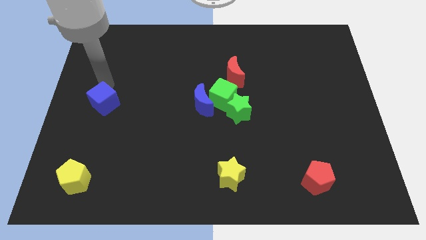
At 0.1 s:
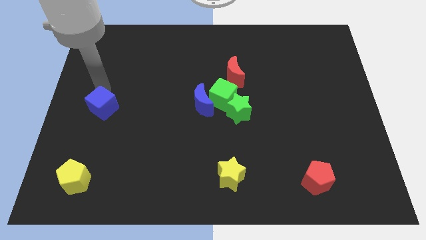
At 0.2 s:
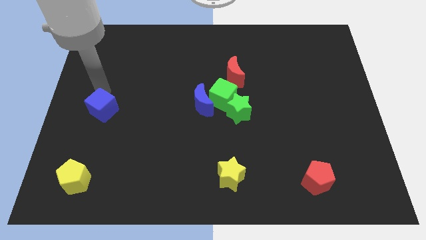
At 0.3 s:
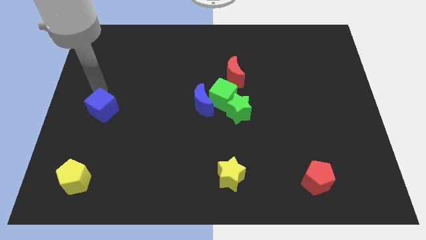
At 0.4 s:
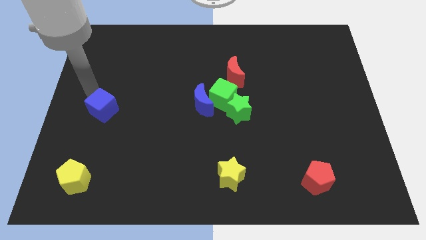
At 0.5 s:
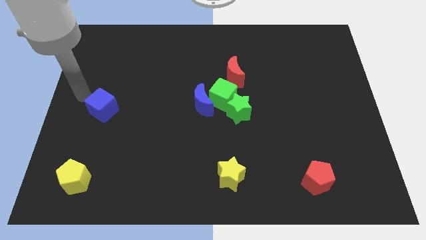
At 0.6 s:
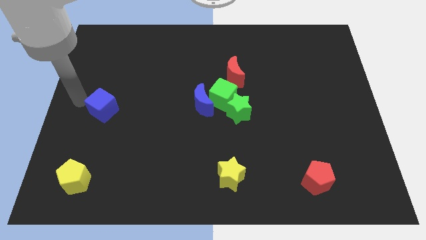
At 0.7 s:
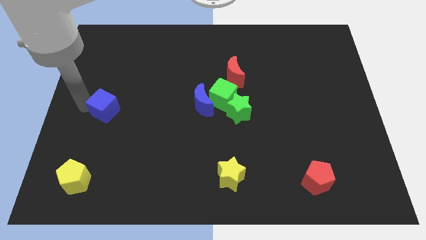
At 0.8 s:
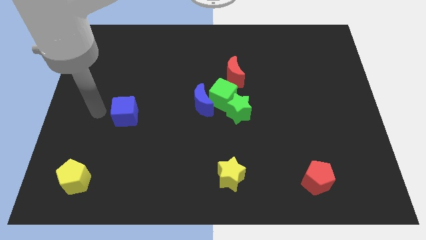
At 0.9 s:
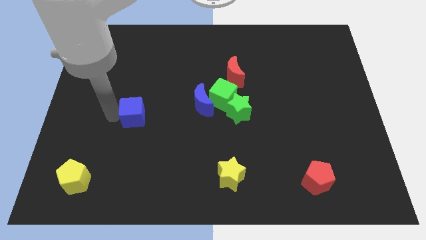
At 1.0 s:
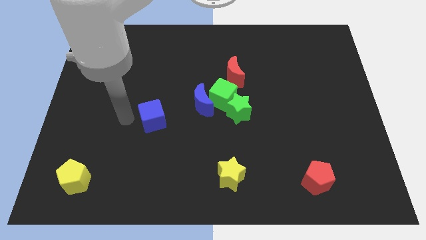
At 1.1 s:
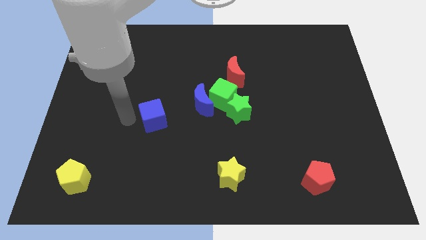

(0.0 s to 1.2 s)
move blue cube slightly right

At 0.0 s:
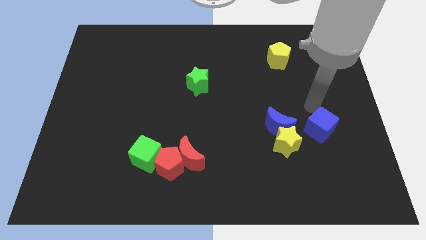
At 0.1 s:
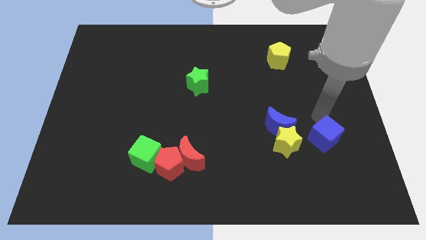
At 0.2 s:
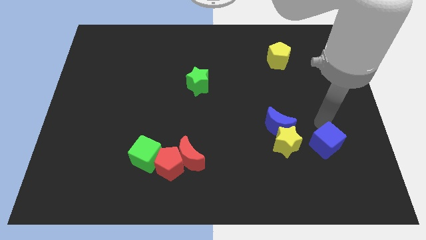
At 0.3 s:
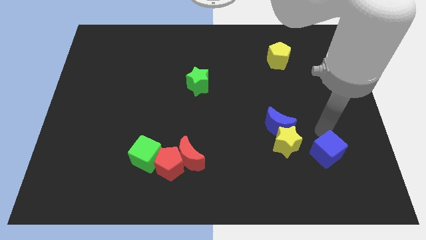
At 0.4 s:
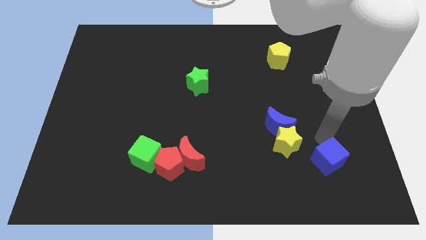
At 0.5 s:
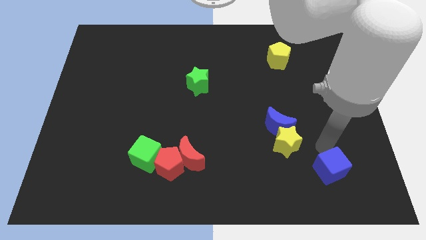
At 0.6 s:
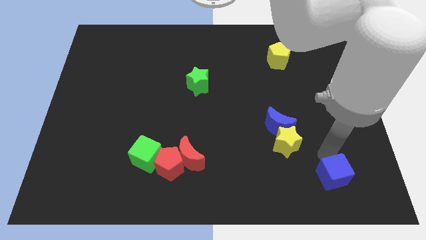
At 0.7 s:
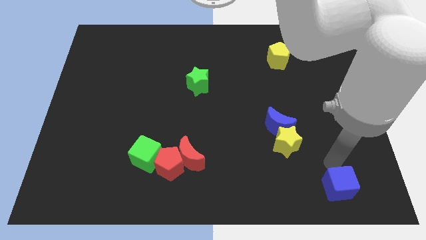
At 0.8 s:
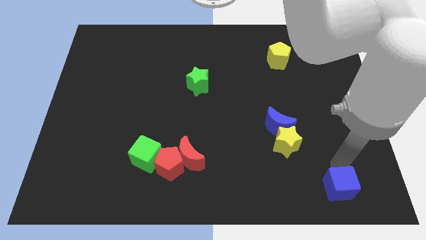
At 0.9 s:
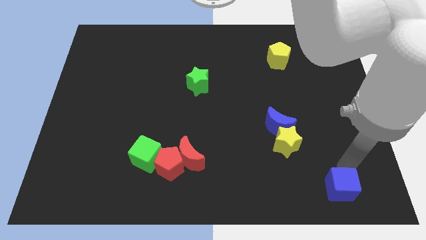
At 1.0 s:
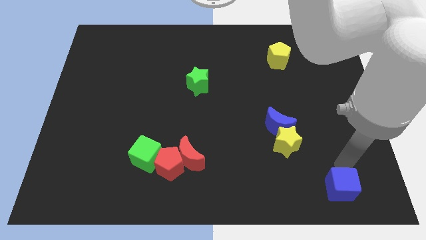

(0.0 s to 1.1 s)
push the blue cube downward

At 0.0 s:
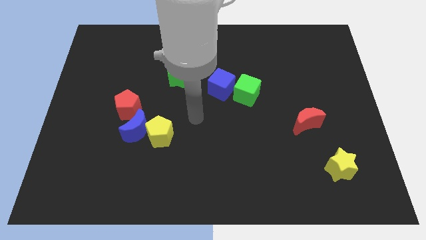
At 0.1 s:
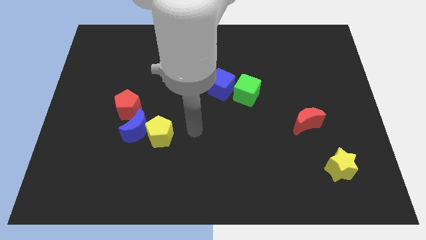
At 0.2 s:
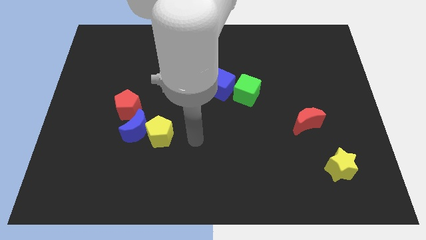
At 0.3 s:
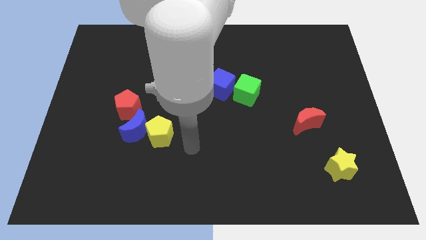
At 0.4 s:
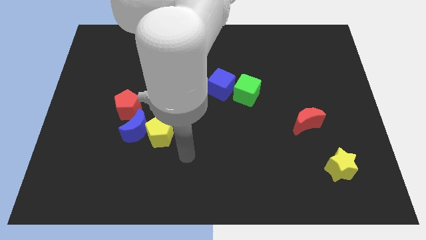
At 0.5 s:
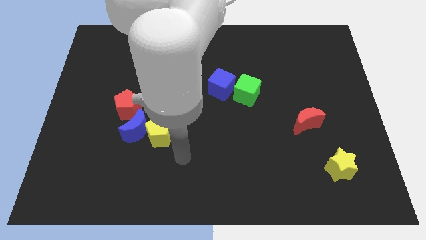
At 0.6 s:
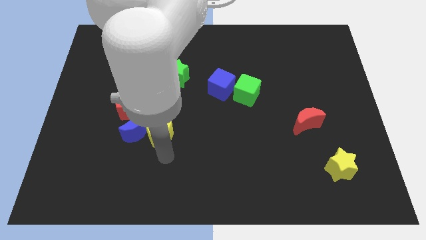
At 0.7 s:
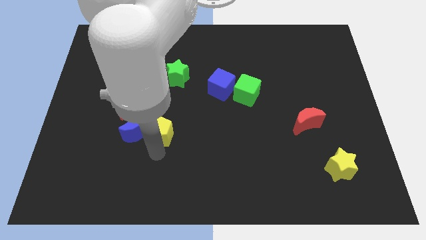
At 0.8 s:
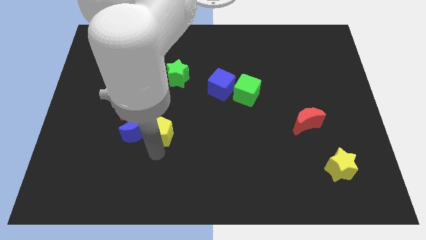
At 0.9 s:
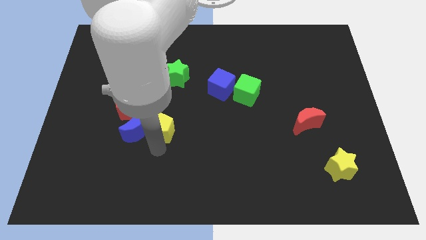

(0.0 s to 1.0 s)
move the arm to the bottom of the yellow pentagon

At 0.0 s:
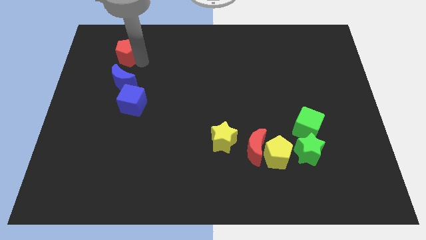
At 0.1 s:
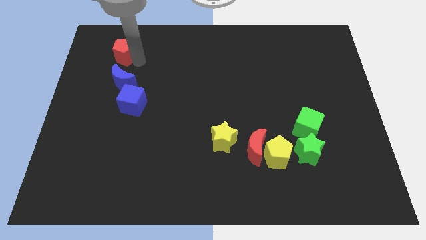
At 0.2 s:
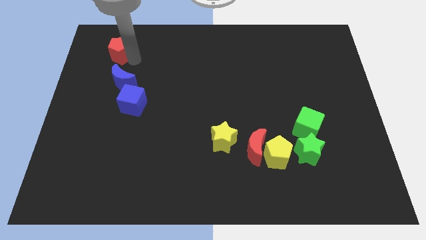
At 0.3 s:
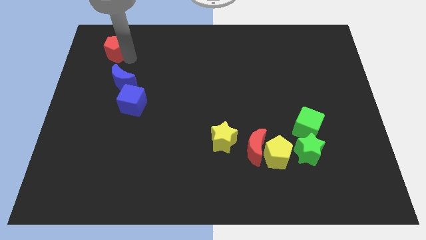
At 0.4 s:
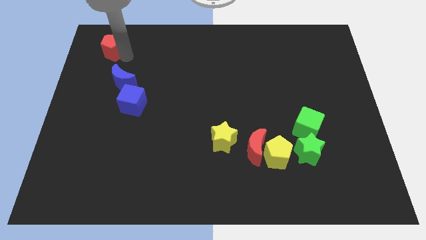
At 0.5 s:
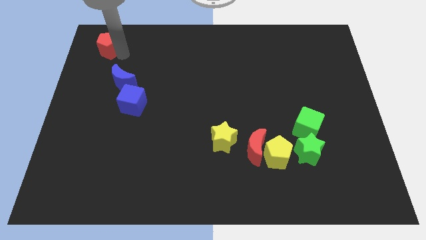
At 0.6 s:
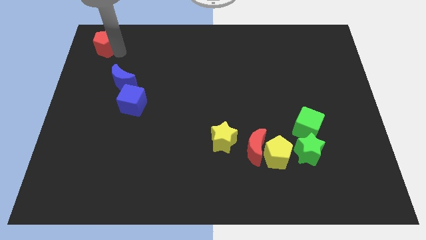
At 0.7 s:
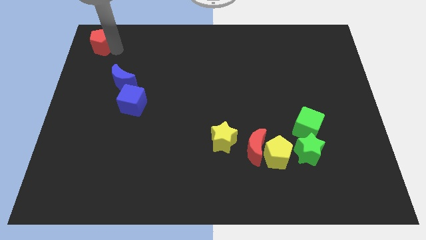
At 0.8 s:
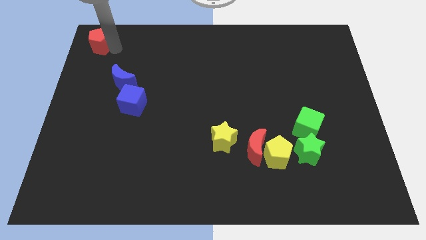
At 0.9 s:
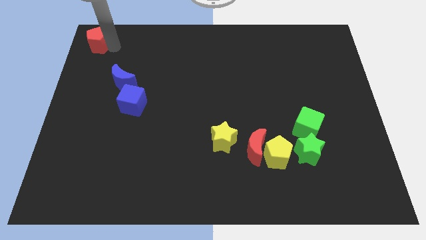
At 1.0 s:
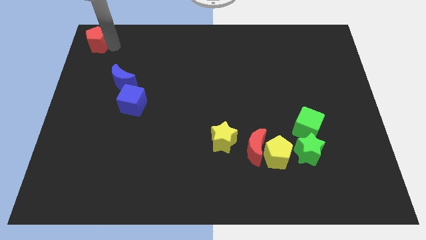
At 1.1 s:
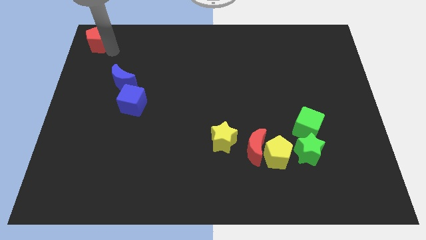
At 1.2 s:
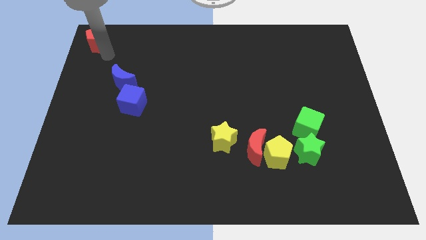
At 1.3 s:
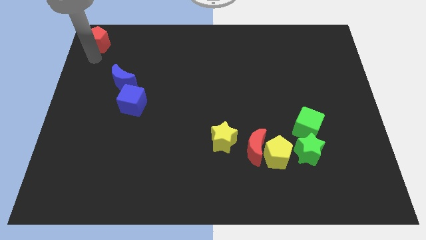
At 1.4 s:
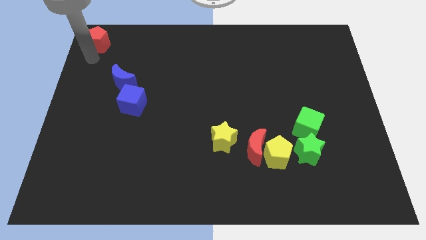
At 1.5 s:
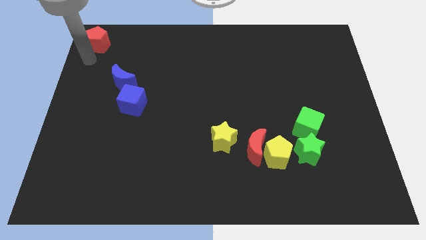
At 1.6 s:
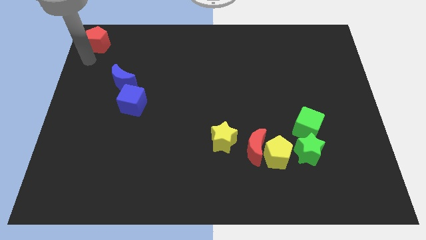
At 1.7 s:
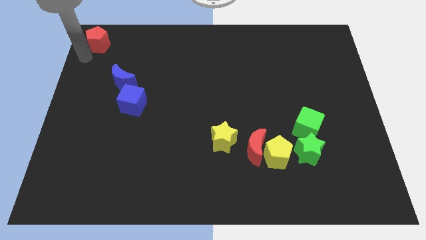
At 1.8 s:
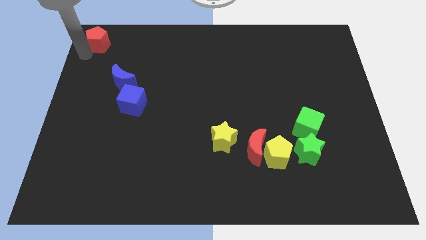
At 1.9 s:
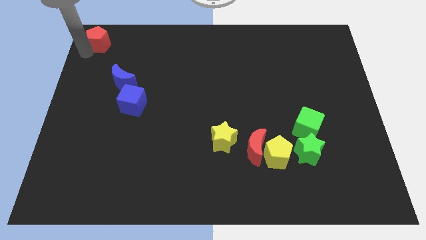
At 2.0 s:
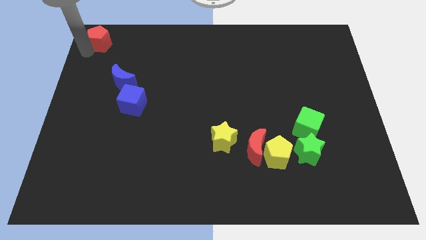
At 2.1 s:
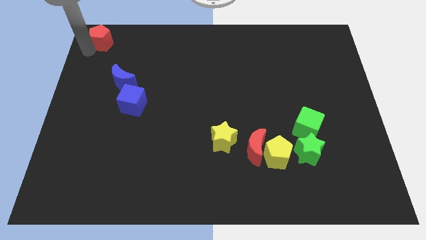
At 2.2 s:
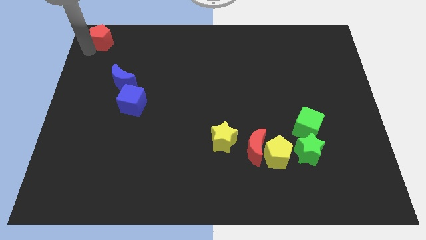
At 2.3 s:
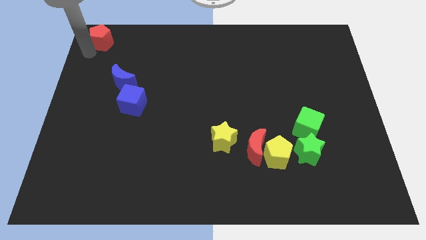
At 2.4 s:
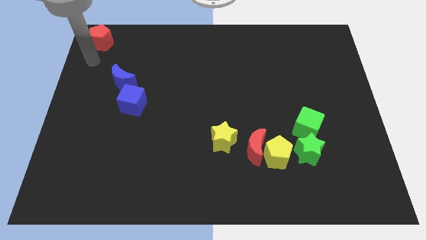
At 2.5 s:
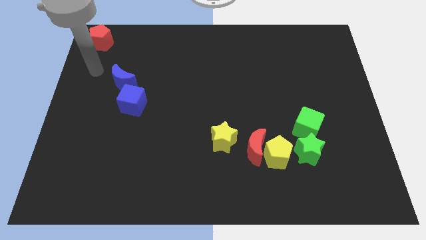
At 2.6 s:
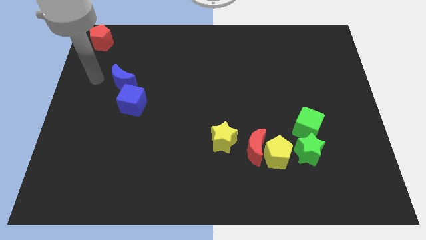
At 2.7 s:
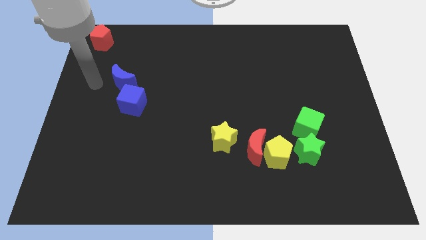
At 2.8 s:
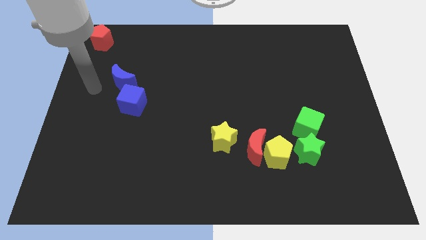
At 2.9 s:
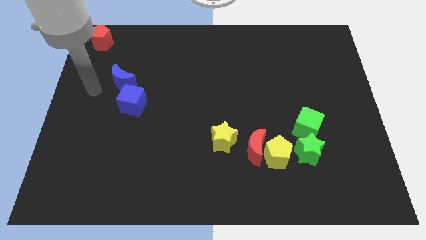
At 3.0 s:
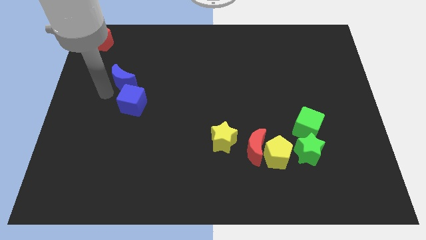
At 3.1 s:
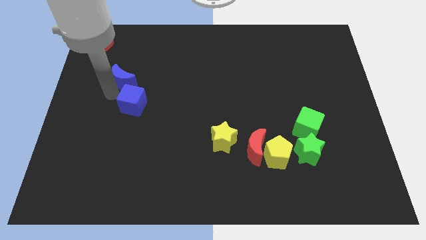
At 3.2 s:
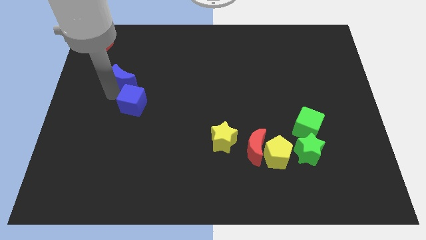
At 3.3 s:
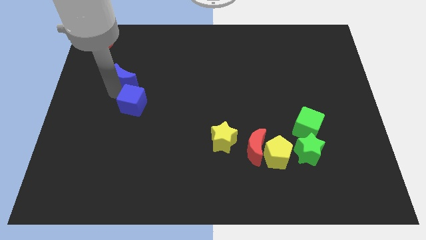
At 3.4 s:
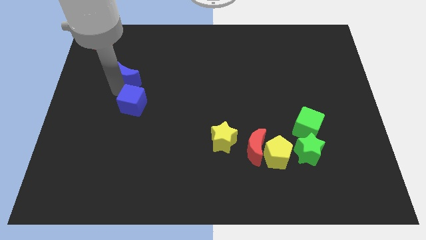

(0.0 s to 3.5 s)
push the red pentagon to the top left corner of the board

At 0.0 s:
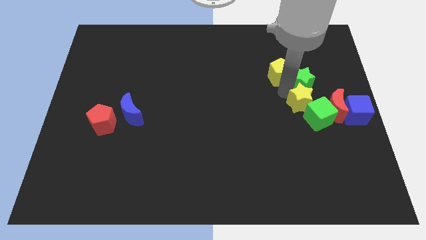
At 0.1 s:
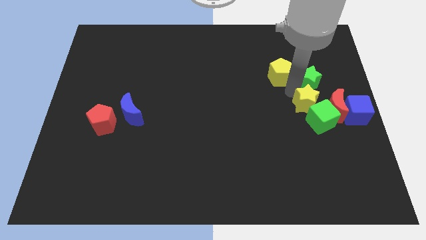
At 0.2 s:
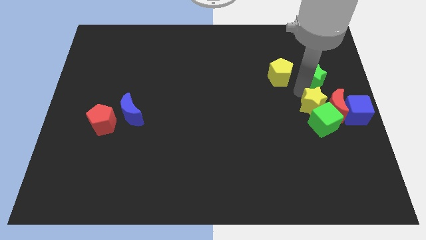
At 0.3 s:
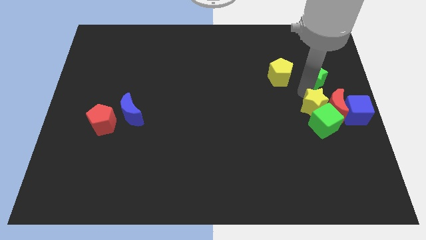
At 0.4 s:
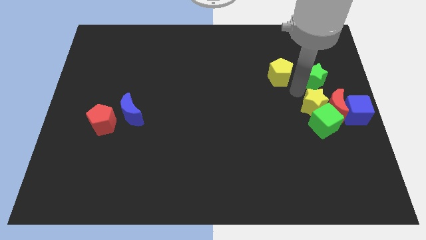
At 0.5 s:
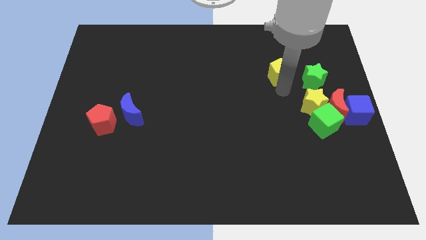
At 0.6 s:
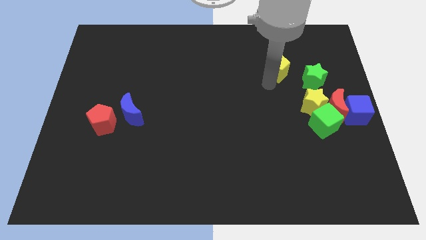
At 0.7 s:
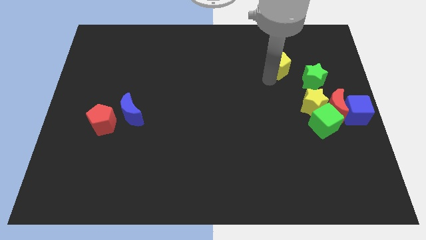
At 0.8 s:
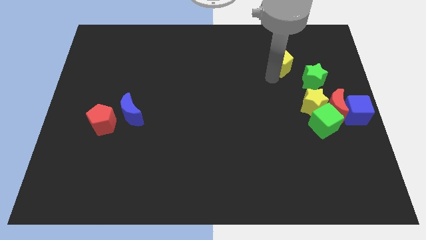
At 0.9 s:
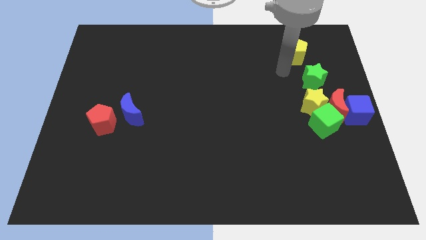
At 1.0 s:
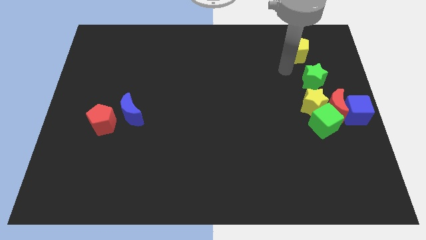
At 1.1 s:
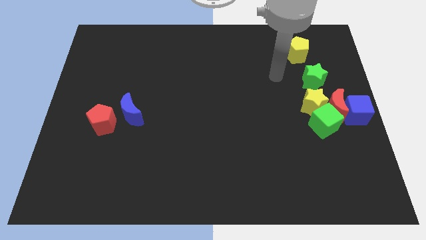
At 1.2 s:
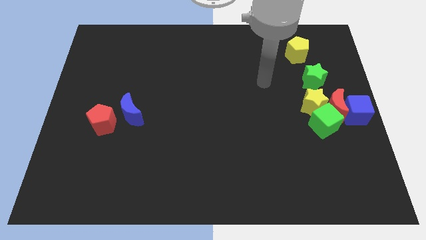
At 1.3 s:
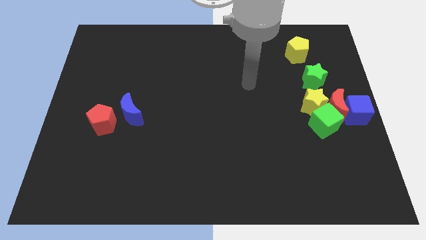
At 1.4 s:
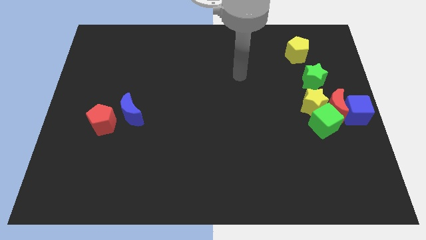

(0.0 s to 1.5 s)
move yellow pentagon upwards

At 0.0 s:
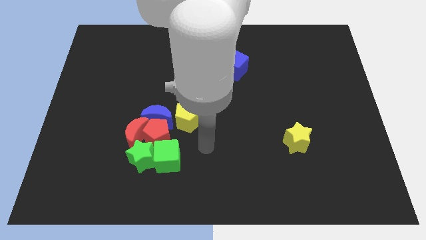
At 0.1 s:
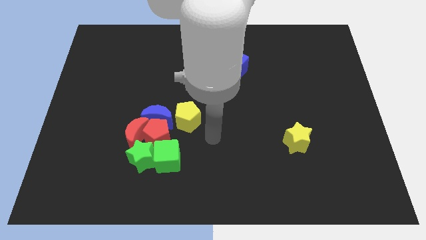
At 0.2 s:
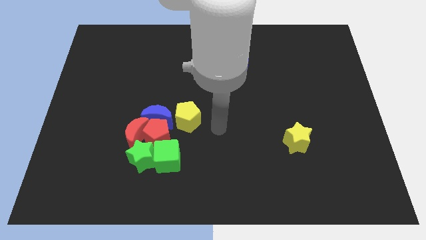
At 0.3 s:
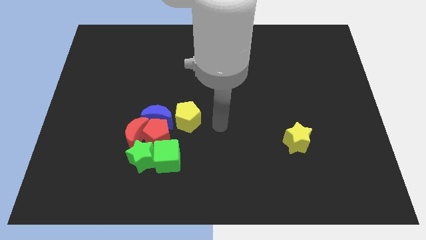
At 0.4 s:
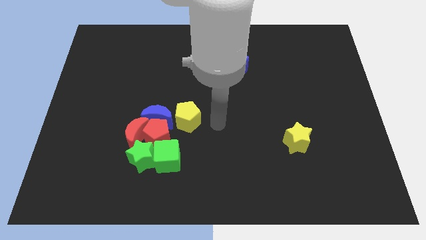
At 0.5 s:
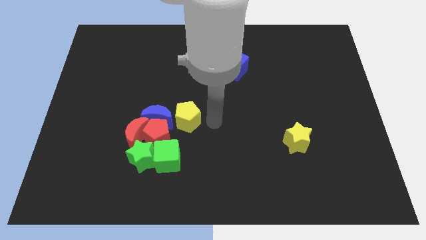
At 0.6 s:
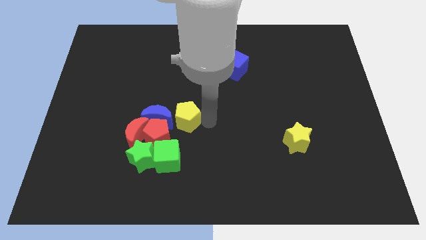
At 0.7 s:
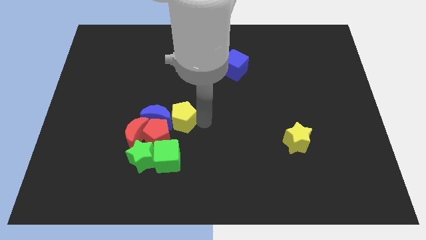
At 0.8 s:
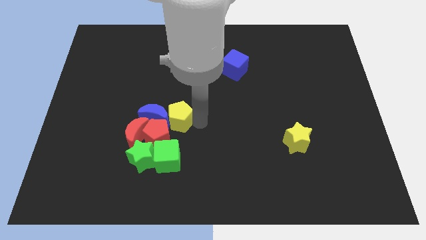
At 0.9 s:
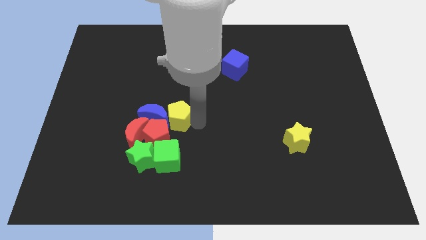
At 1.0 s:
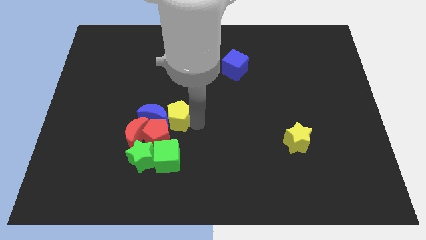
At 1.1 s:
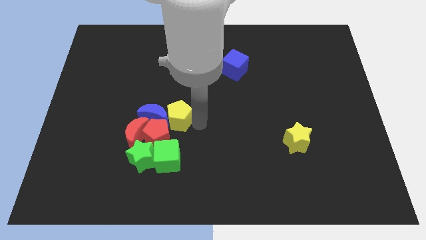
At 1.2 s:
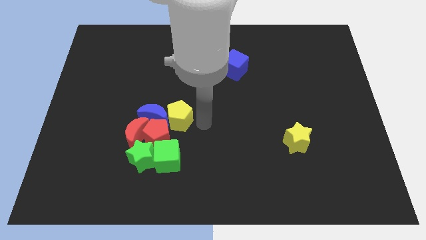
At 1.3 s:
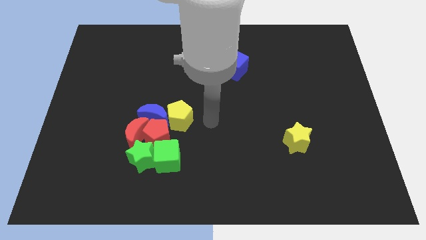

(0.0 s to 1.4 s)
slide the yellow pentagon into the blue crescent
